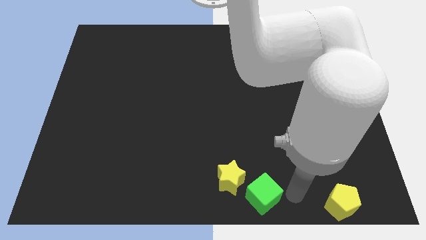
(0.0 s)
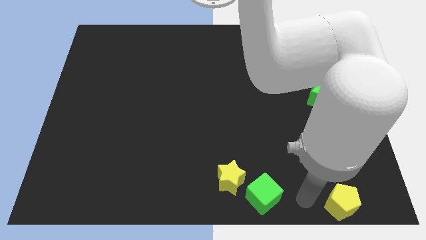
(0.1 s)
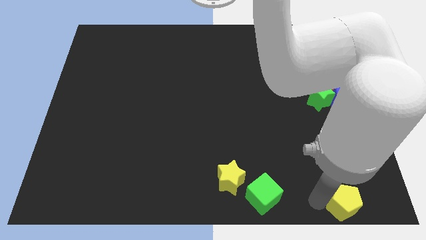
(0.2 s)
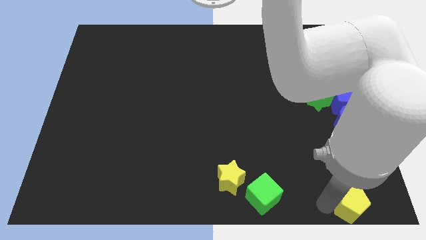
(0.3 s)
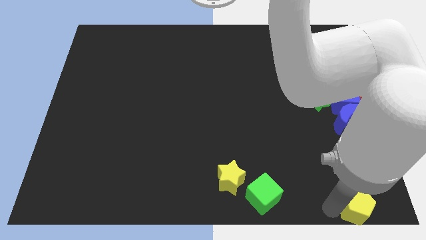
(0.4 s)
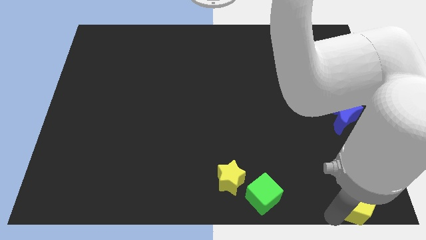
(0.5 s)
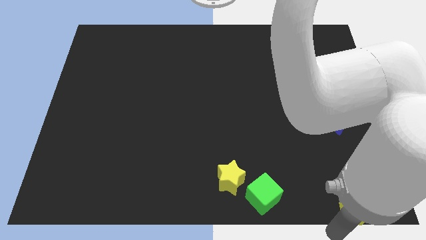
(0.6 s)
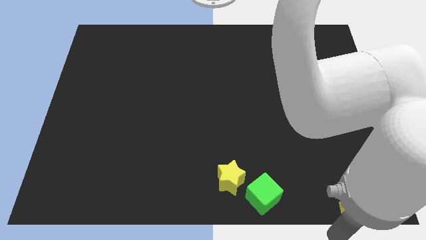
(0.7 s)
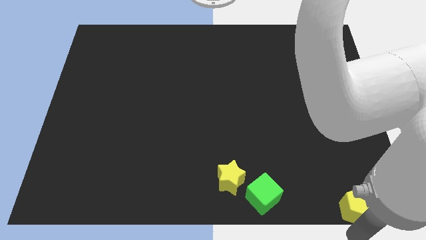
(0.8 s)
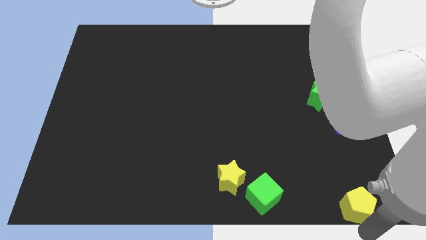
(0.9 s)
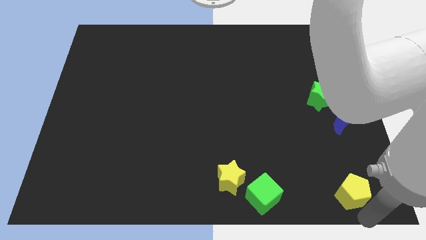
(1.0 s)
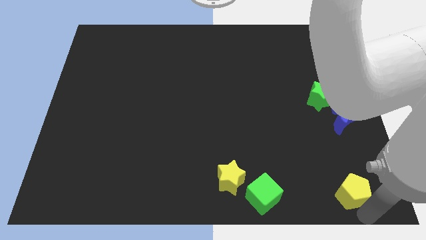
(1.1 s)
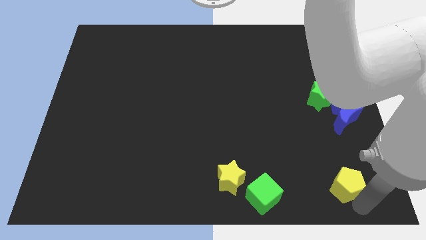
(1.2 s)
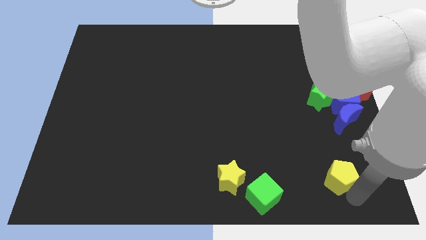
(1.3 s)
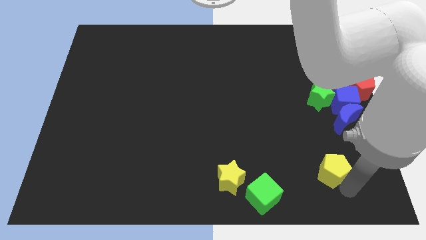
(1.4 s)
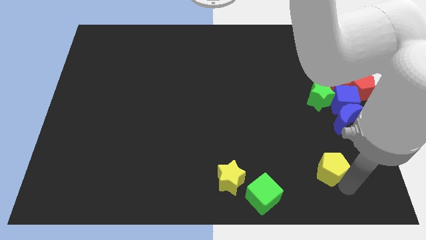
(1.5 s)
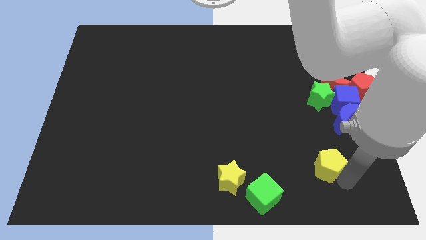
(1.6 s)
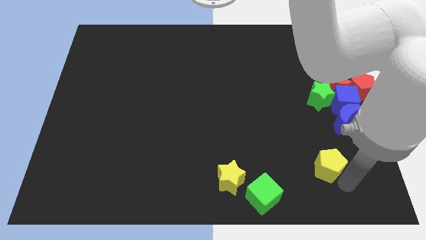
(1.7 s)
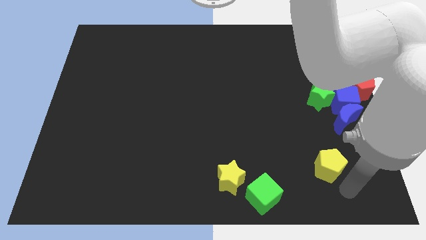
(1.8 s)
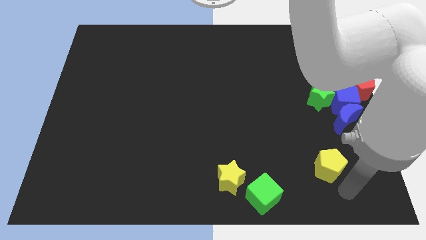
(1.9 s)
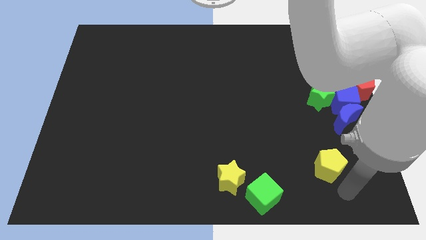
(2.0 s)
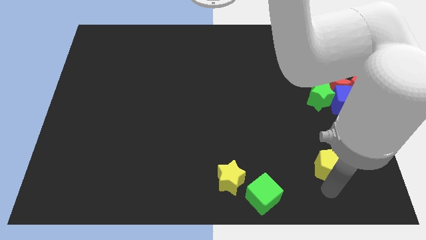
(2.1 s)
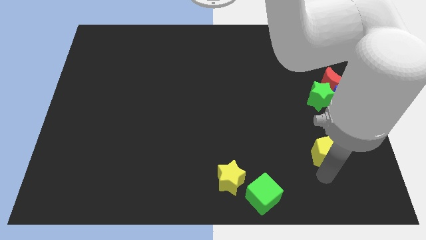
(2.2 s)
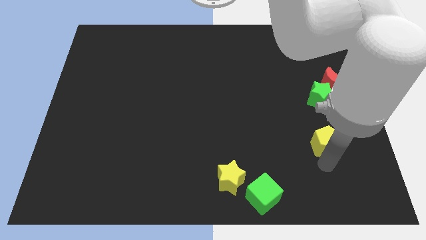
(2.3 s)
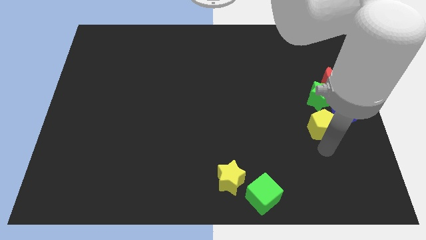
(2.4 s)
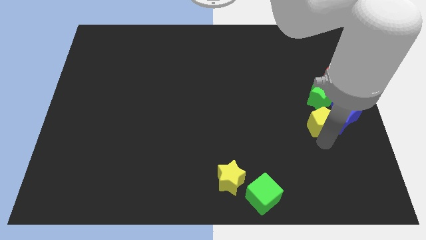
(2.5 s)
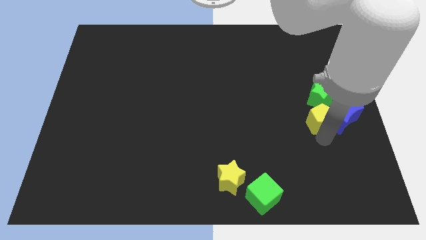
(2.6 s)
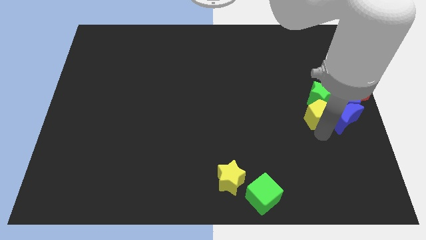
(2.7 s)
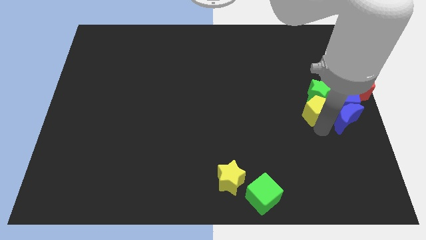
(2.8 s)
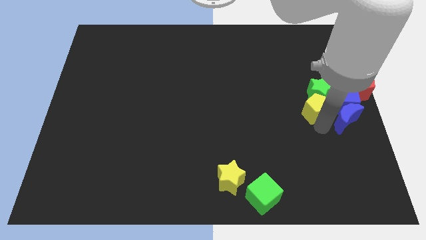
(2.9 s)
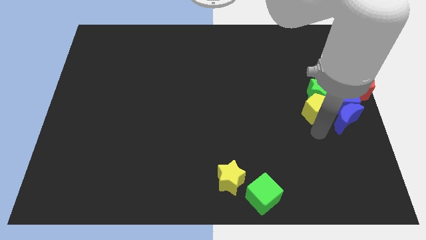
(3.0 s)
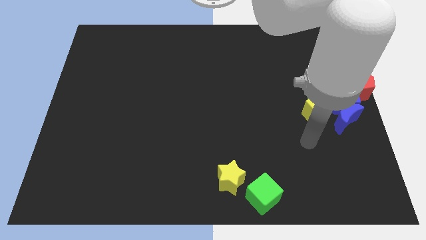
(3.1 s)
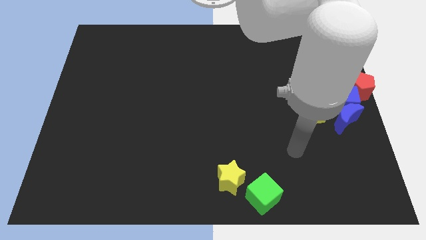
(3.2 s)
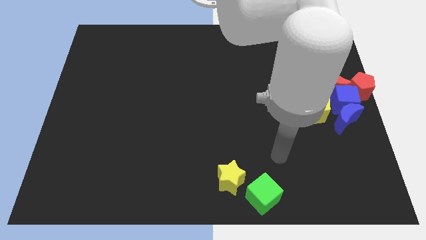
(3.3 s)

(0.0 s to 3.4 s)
push the yellow pentagon into the group of blocks

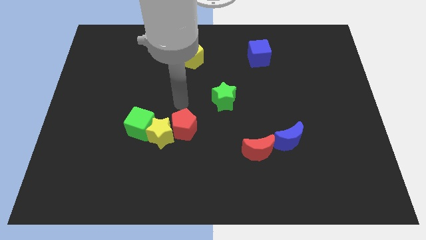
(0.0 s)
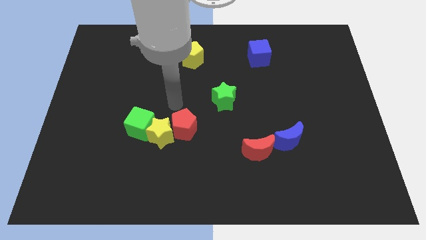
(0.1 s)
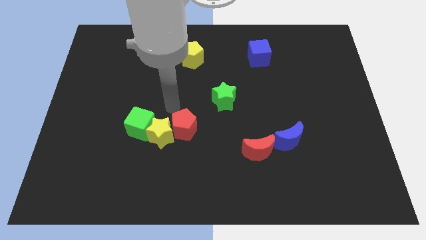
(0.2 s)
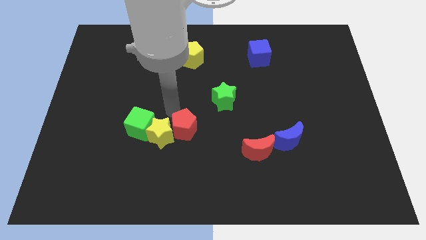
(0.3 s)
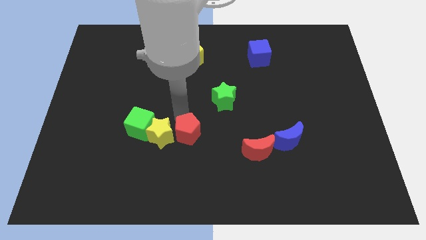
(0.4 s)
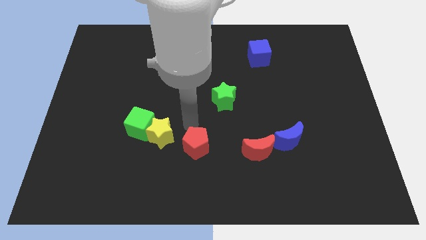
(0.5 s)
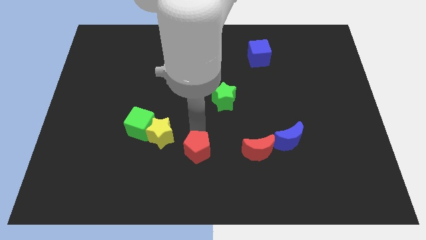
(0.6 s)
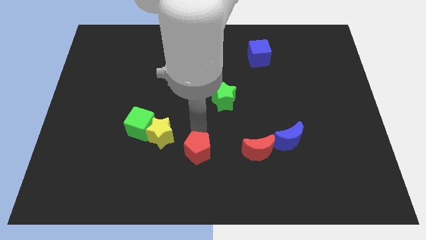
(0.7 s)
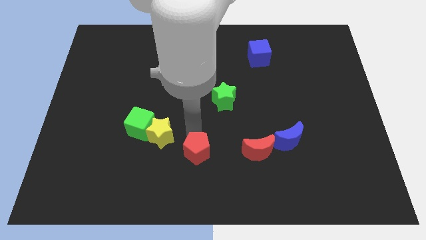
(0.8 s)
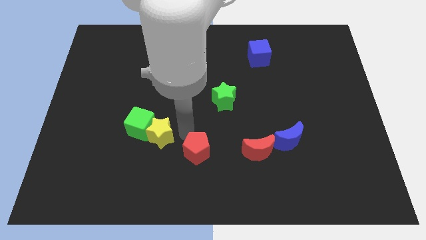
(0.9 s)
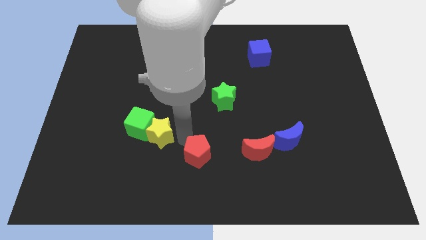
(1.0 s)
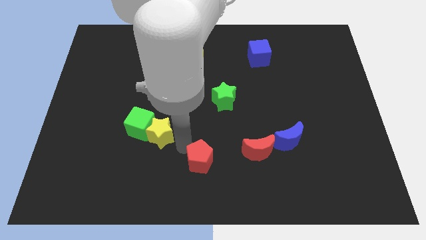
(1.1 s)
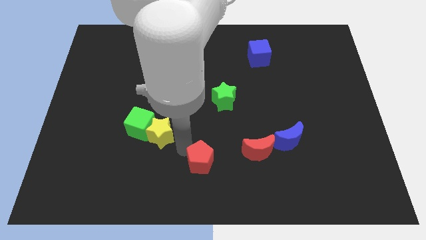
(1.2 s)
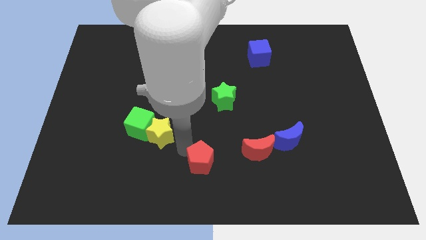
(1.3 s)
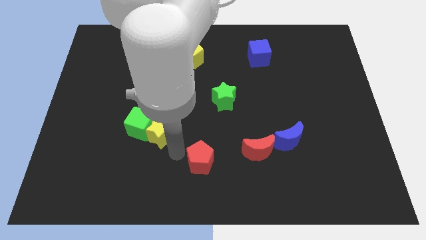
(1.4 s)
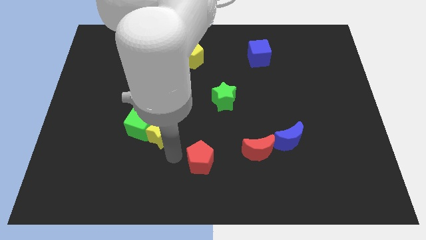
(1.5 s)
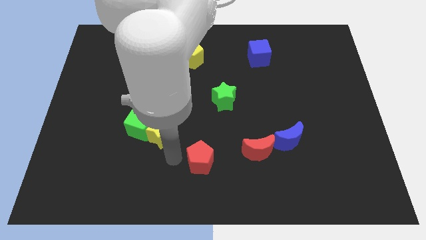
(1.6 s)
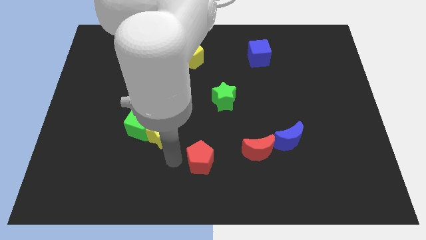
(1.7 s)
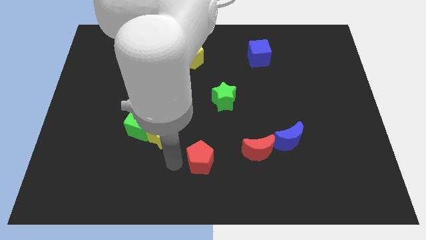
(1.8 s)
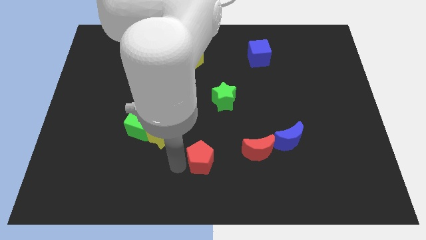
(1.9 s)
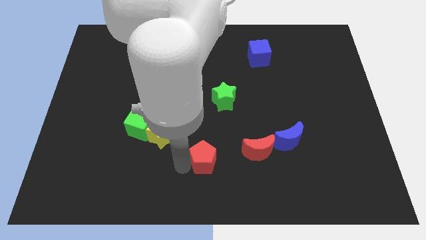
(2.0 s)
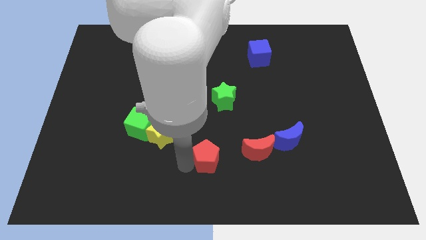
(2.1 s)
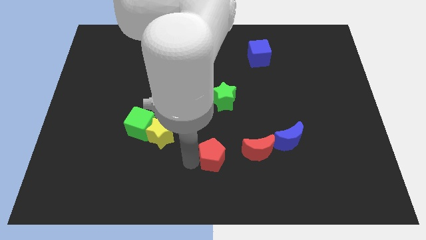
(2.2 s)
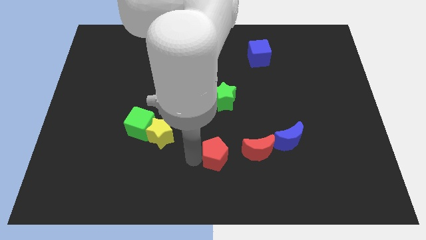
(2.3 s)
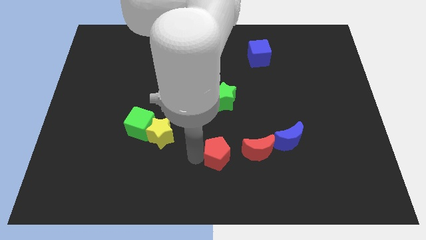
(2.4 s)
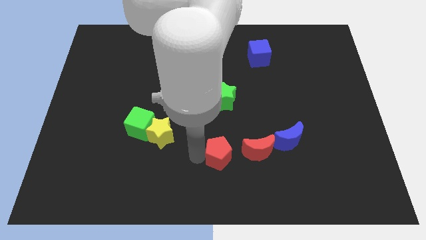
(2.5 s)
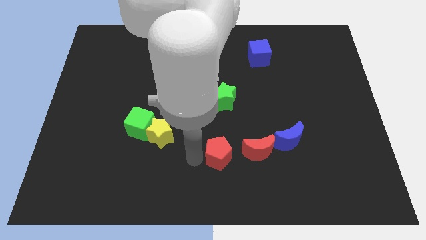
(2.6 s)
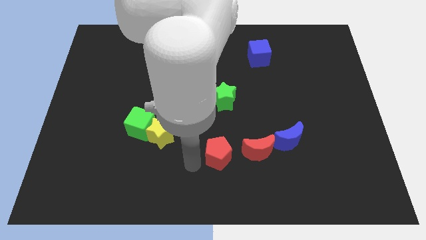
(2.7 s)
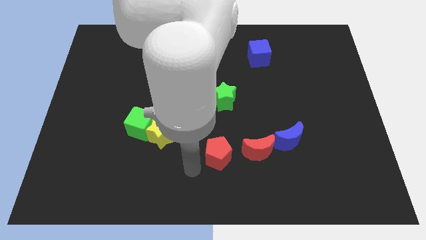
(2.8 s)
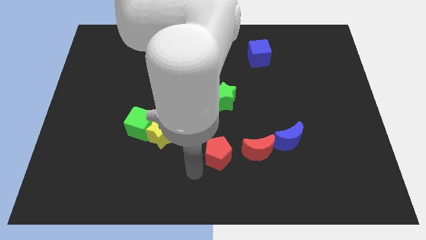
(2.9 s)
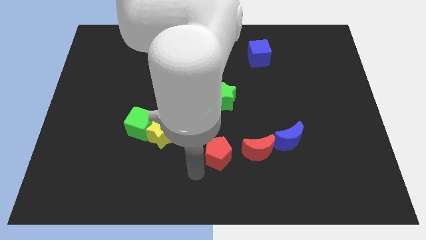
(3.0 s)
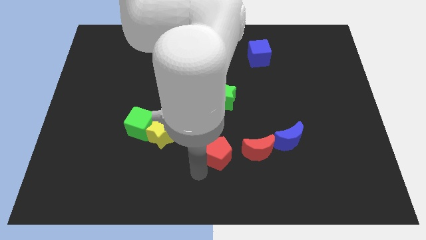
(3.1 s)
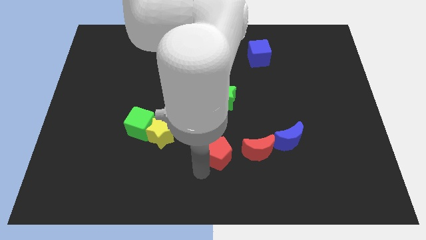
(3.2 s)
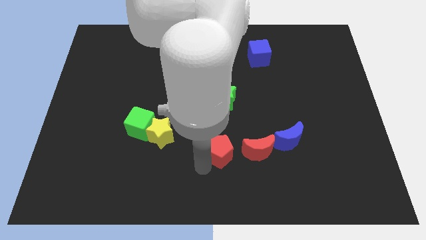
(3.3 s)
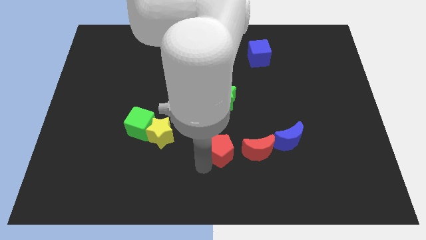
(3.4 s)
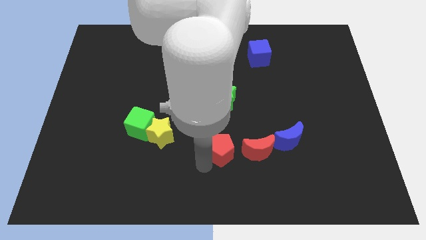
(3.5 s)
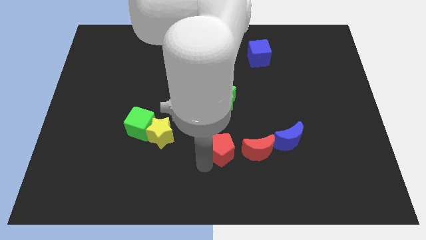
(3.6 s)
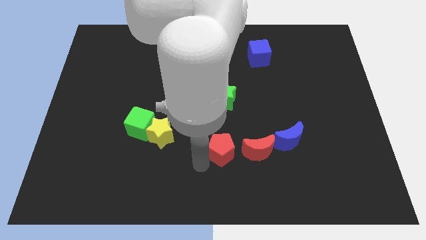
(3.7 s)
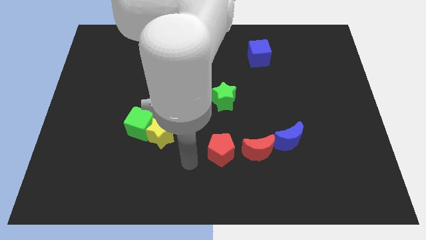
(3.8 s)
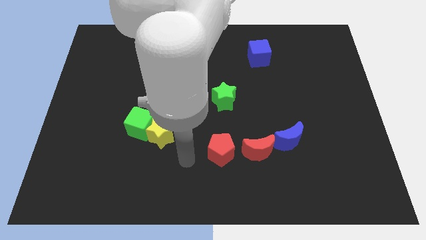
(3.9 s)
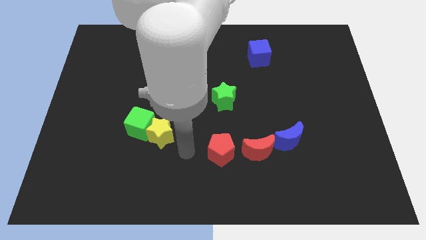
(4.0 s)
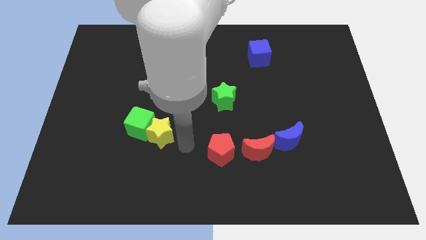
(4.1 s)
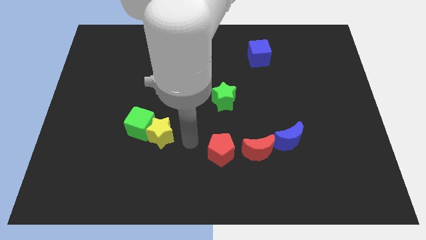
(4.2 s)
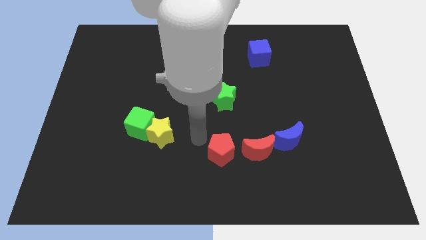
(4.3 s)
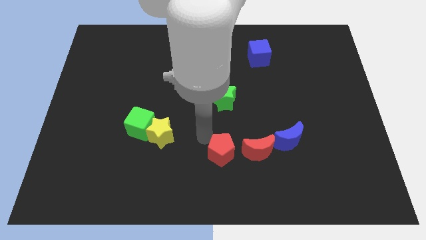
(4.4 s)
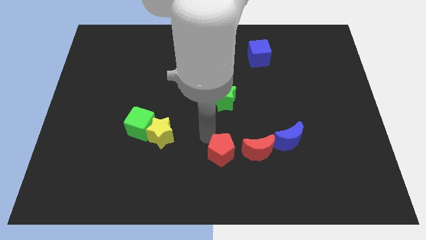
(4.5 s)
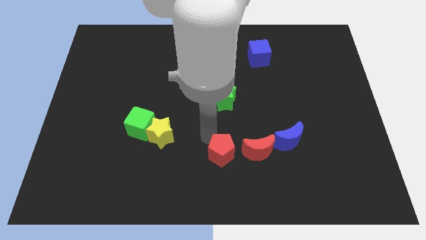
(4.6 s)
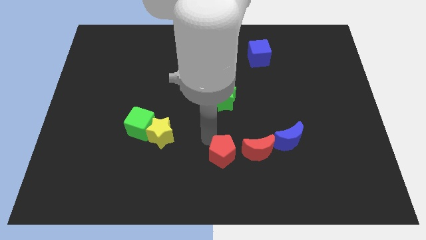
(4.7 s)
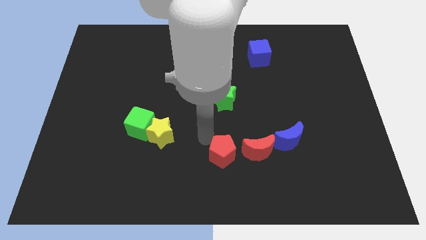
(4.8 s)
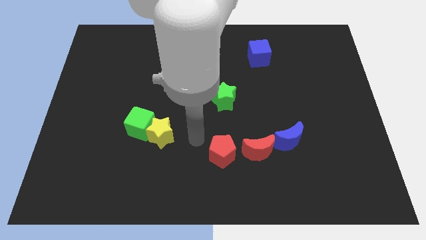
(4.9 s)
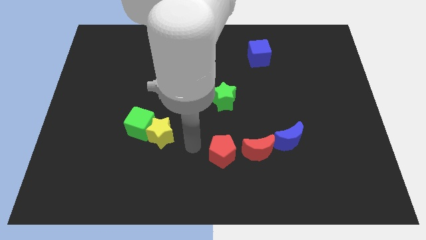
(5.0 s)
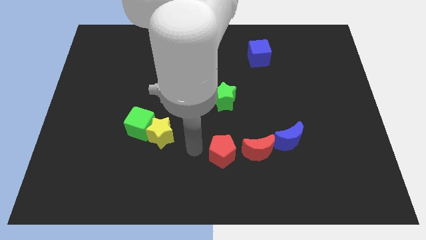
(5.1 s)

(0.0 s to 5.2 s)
put the red pentagon to the left of the red moon

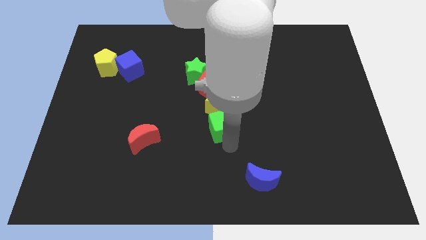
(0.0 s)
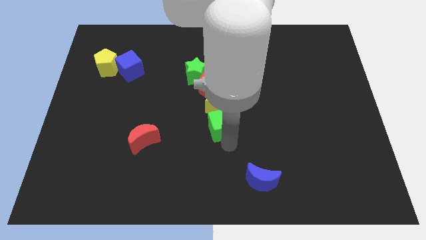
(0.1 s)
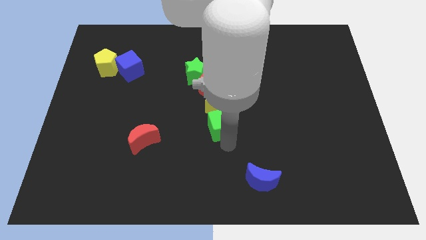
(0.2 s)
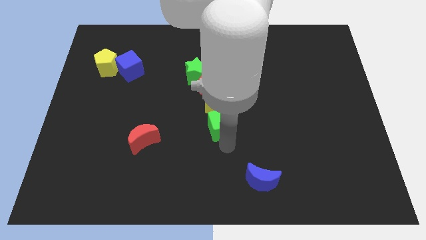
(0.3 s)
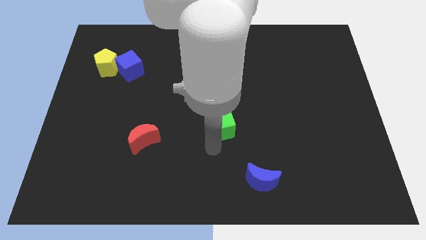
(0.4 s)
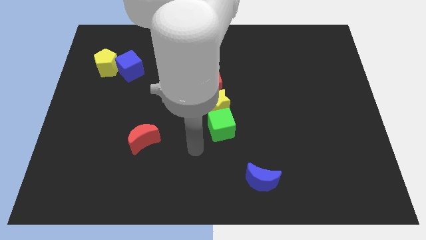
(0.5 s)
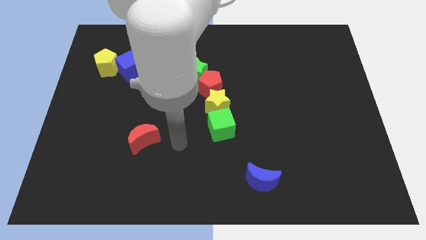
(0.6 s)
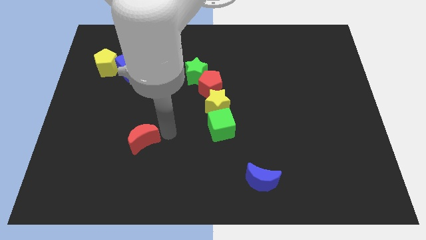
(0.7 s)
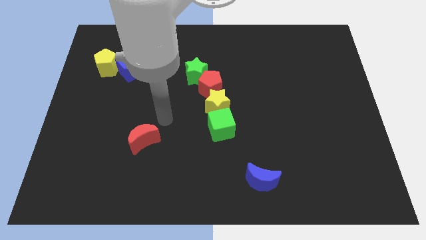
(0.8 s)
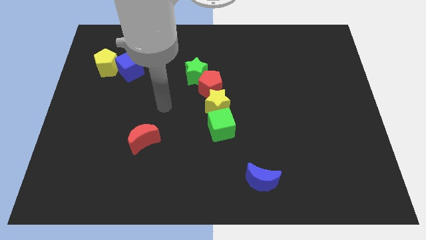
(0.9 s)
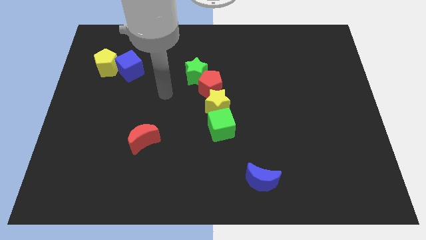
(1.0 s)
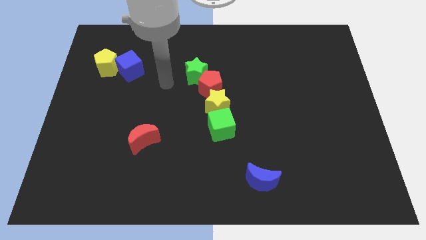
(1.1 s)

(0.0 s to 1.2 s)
move the arm away from the green cube
